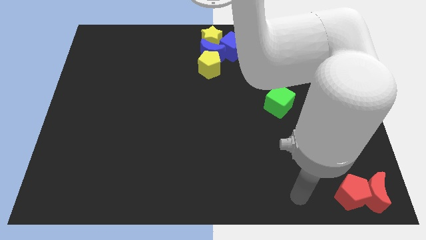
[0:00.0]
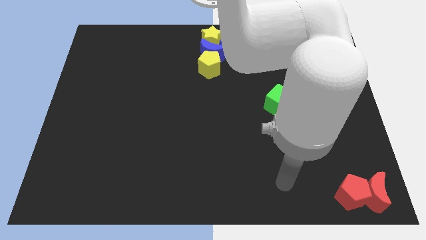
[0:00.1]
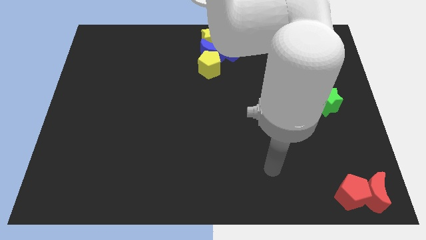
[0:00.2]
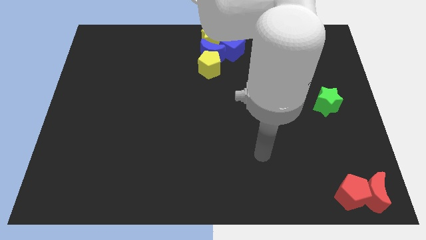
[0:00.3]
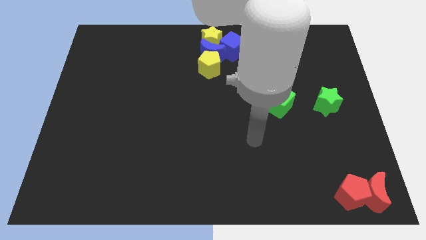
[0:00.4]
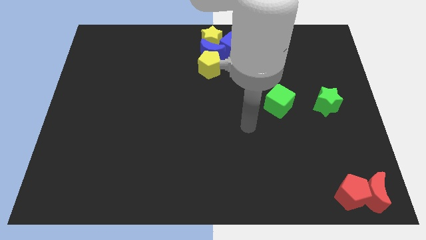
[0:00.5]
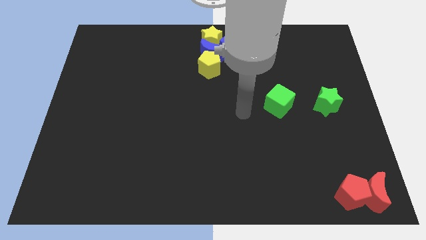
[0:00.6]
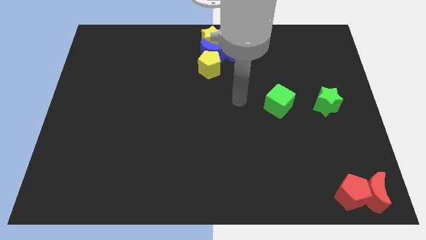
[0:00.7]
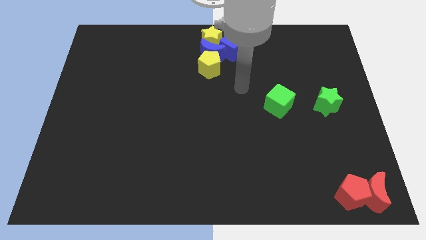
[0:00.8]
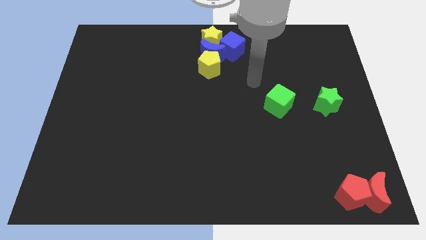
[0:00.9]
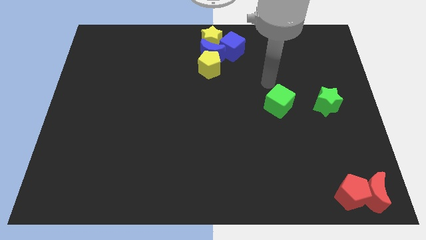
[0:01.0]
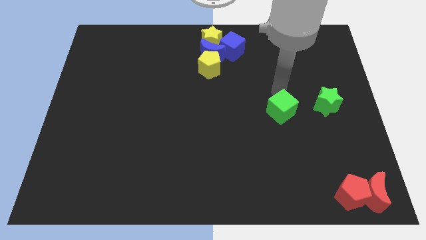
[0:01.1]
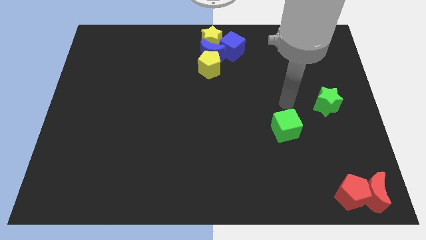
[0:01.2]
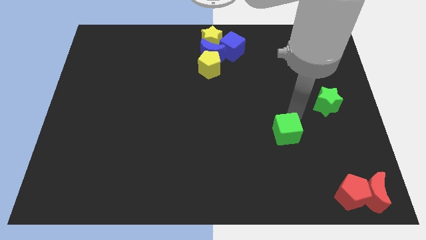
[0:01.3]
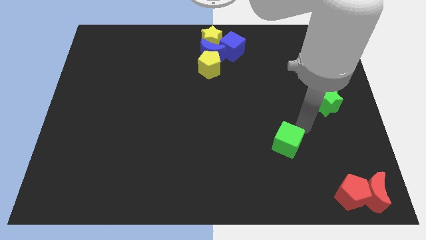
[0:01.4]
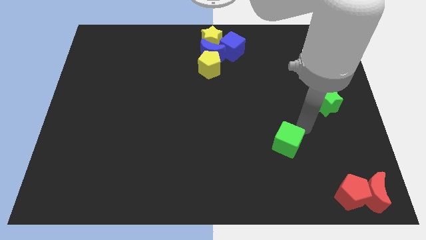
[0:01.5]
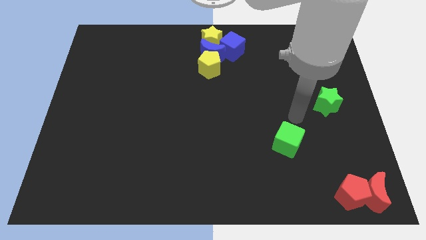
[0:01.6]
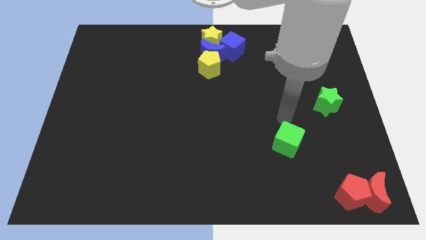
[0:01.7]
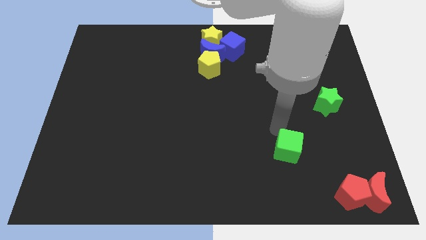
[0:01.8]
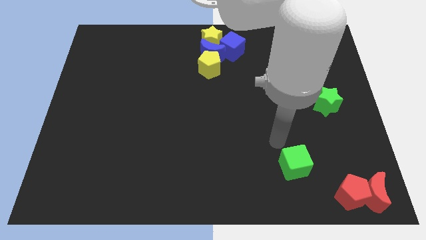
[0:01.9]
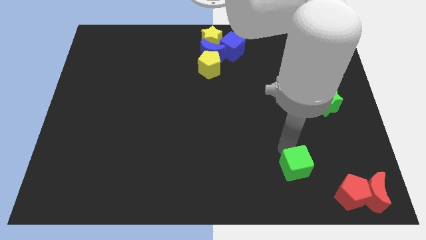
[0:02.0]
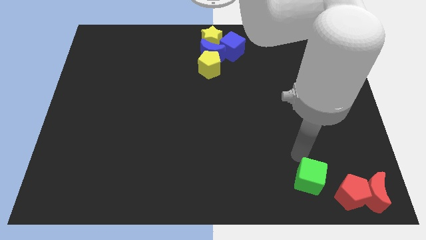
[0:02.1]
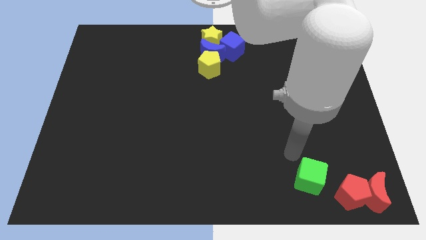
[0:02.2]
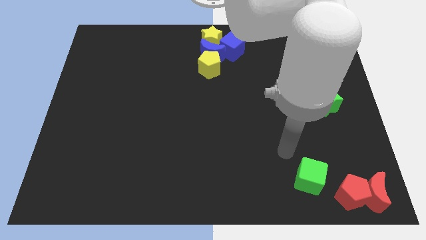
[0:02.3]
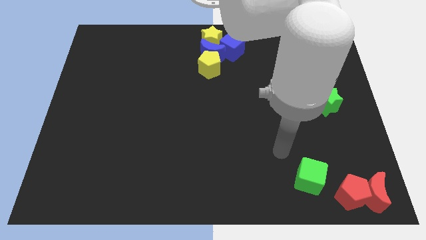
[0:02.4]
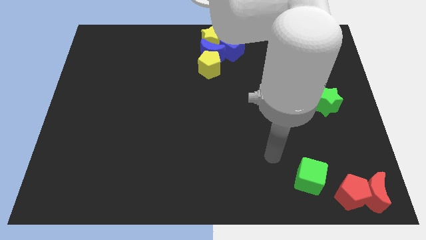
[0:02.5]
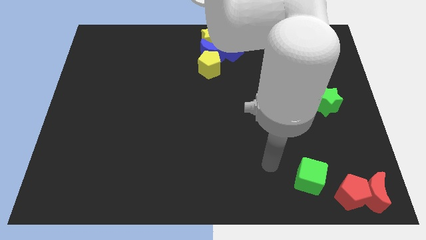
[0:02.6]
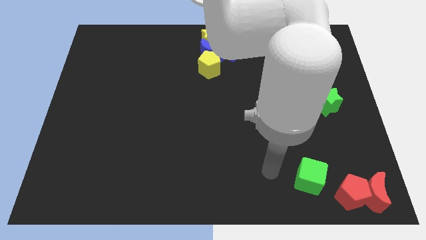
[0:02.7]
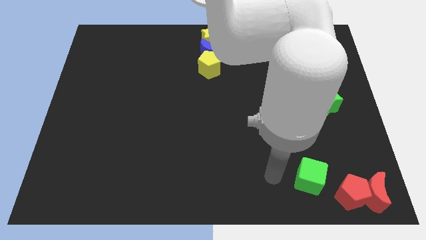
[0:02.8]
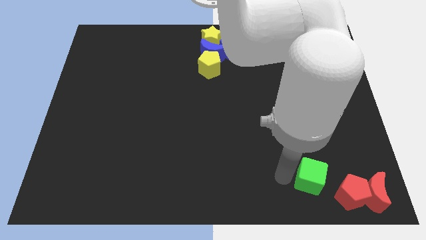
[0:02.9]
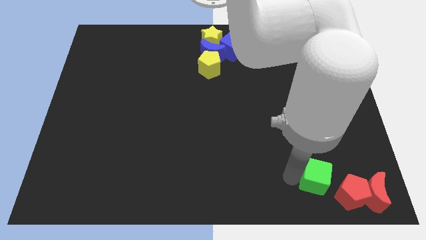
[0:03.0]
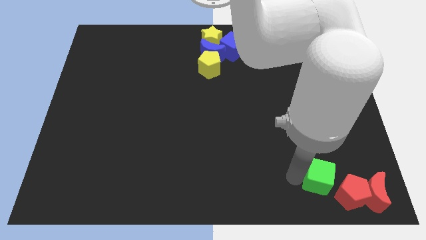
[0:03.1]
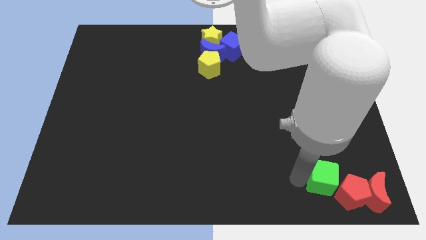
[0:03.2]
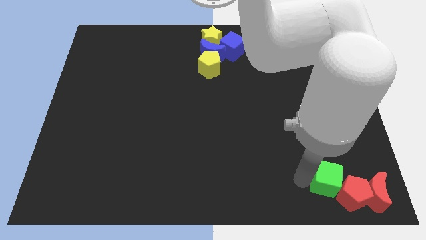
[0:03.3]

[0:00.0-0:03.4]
move the green cube into the left side of the red pentagon

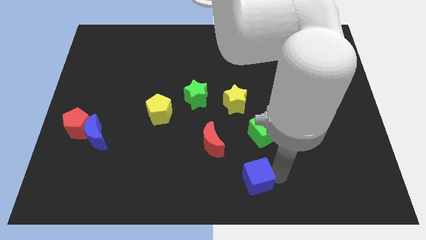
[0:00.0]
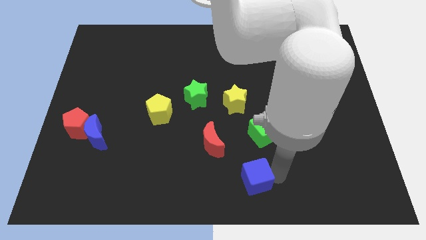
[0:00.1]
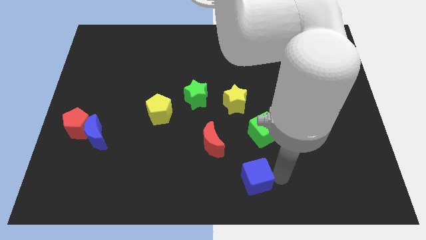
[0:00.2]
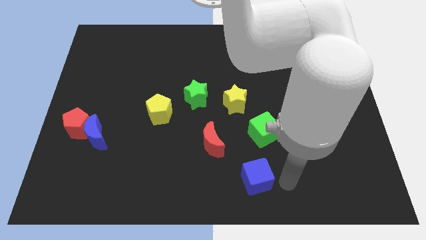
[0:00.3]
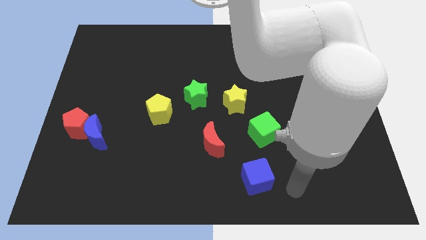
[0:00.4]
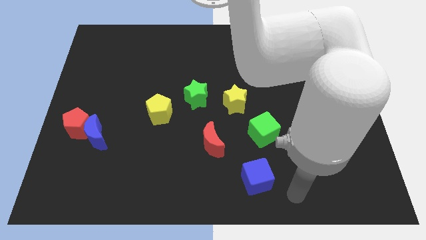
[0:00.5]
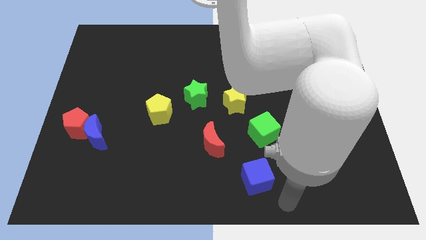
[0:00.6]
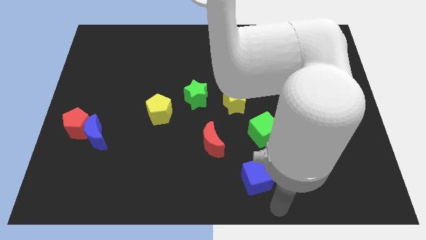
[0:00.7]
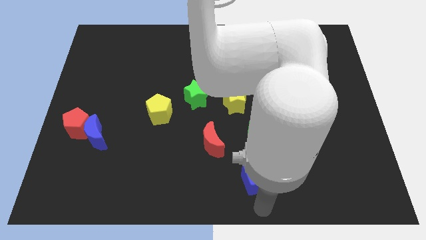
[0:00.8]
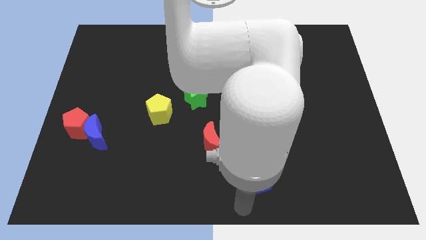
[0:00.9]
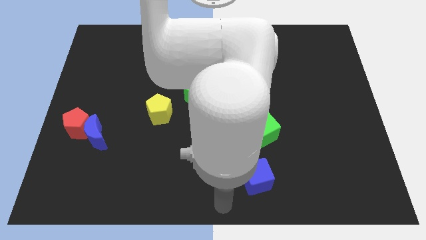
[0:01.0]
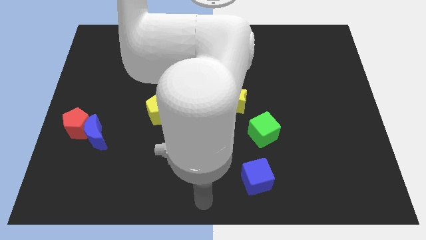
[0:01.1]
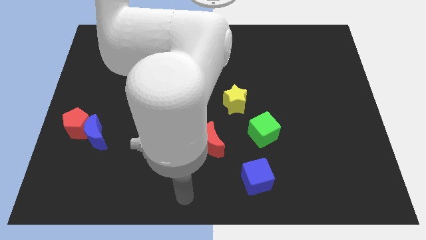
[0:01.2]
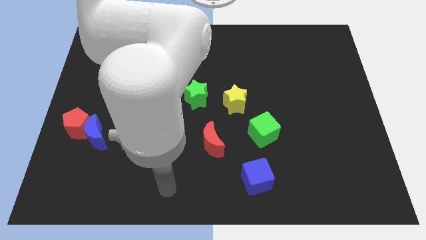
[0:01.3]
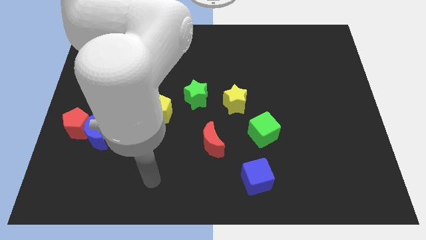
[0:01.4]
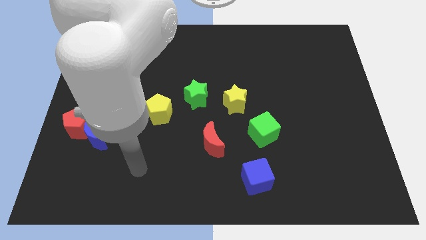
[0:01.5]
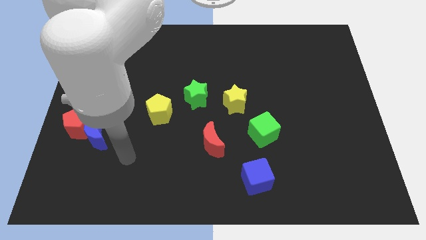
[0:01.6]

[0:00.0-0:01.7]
make a triangle with the help of green cube blue cube and the red crescent

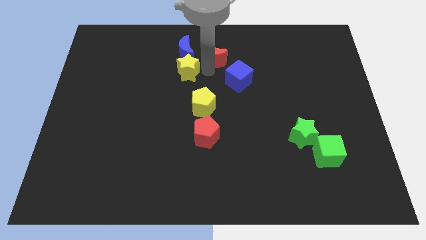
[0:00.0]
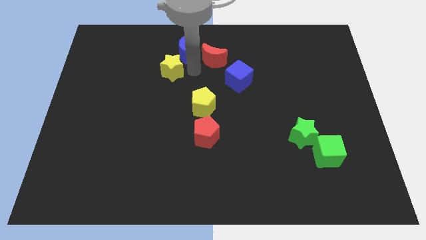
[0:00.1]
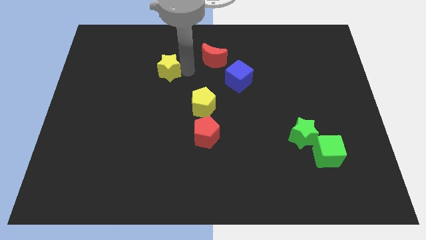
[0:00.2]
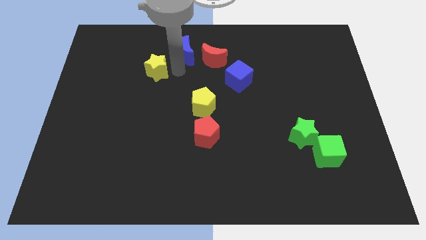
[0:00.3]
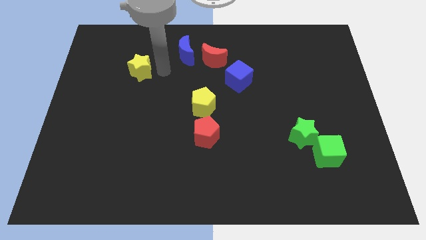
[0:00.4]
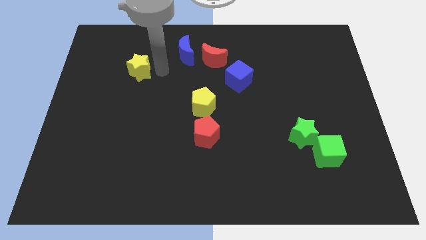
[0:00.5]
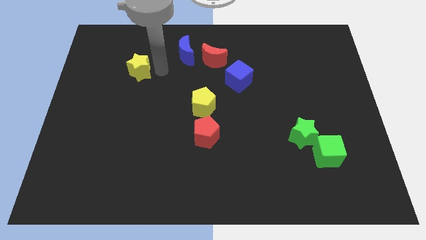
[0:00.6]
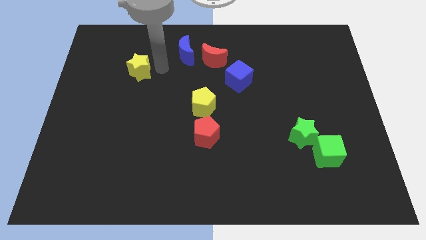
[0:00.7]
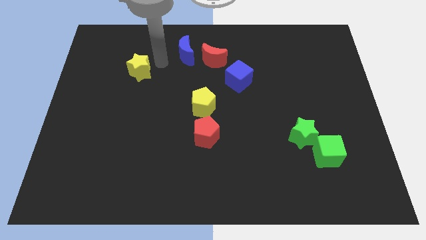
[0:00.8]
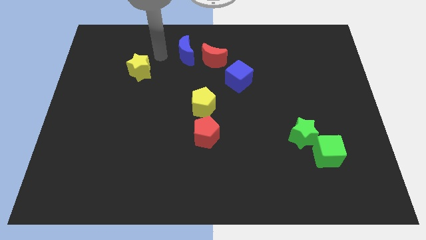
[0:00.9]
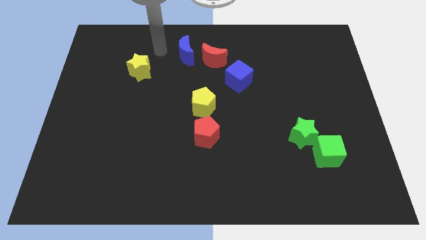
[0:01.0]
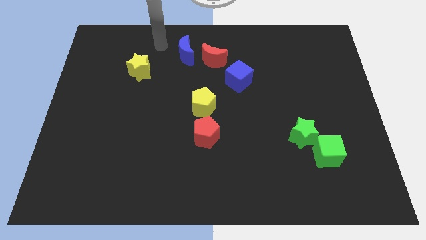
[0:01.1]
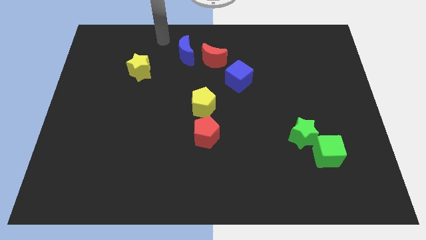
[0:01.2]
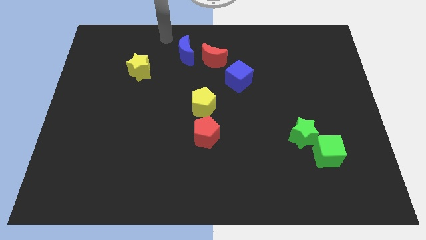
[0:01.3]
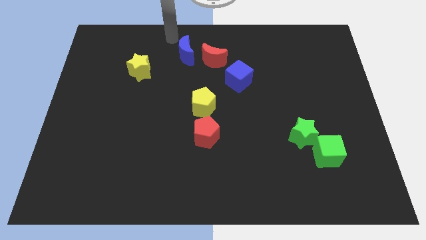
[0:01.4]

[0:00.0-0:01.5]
push the yellow star to the left of the board

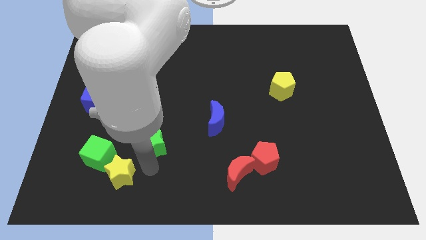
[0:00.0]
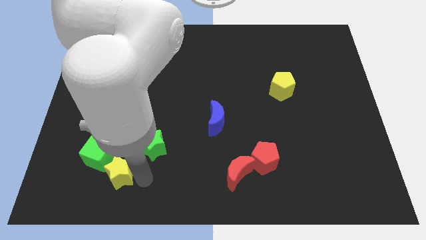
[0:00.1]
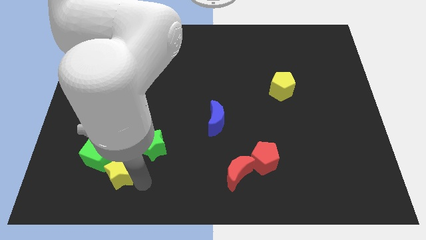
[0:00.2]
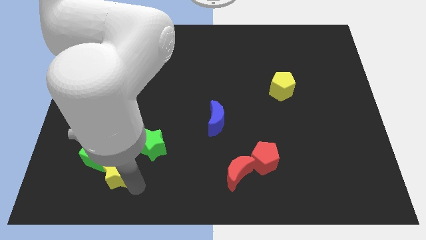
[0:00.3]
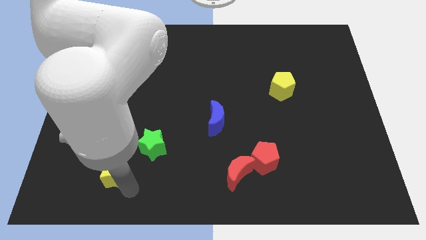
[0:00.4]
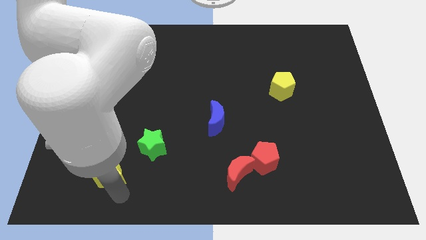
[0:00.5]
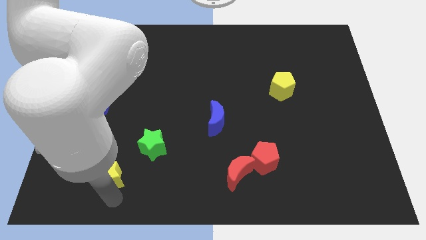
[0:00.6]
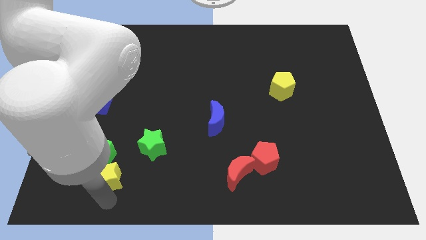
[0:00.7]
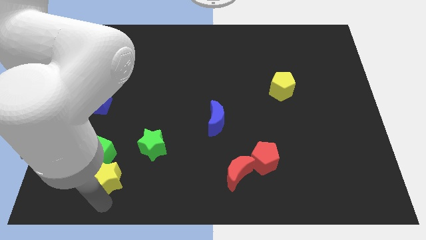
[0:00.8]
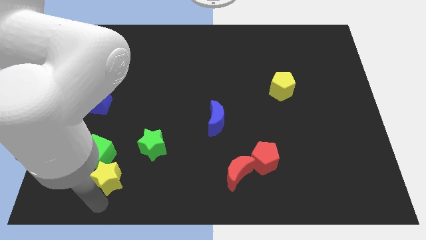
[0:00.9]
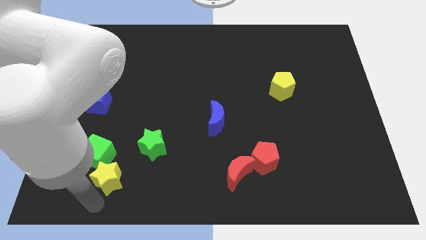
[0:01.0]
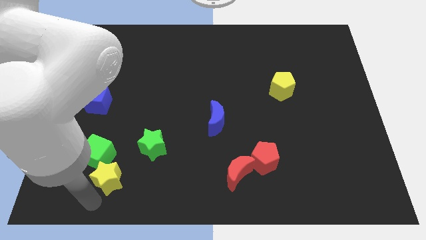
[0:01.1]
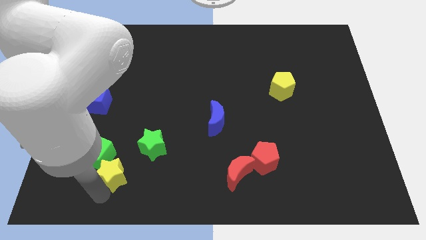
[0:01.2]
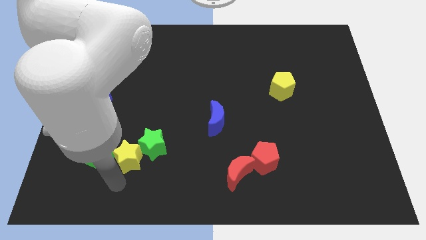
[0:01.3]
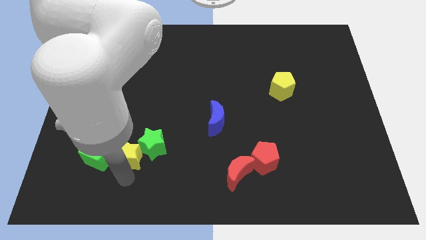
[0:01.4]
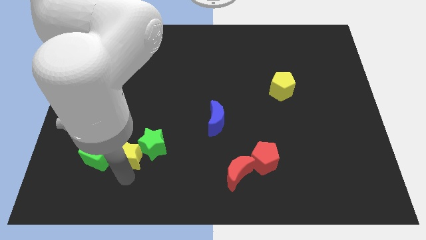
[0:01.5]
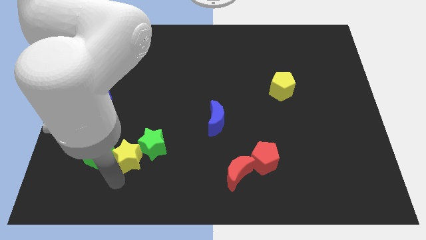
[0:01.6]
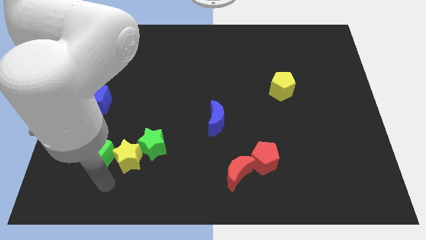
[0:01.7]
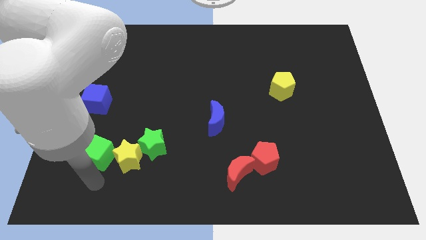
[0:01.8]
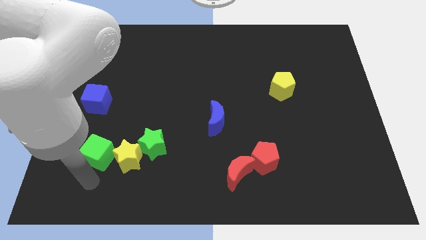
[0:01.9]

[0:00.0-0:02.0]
move yellow star towards the green star

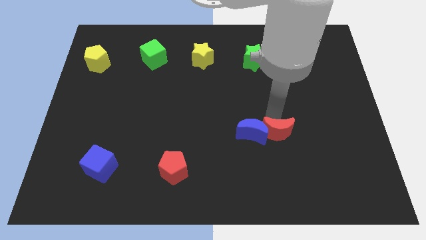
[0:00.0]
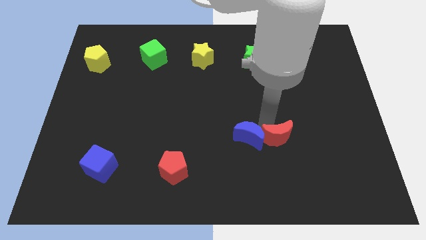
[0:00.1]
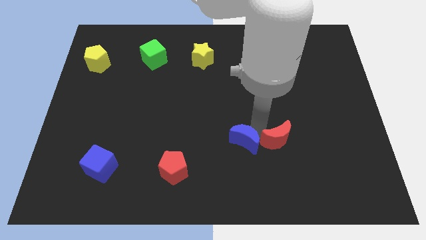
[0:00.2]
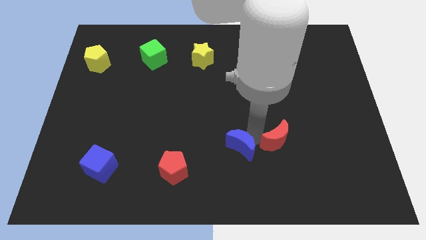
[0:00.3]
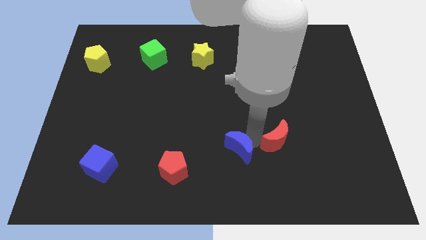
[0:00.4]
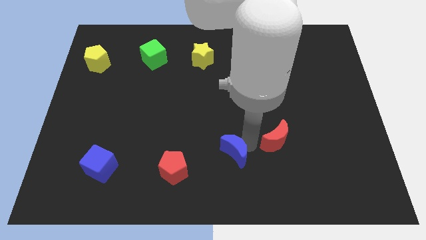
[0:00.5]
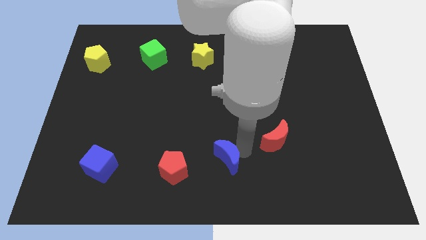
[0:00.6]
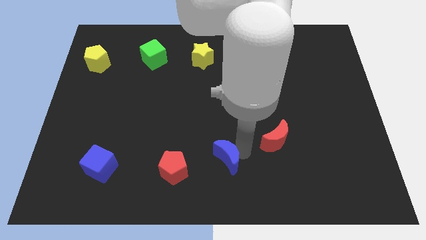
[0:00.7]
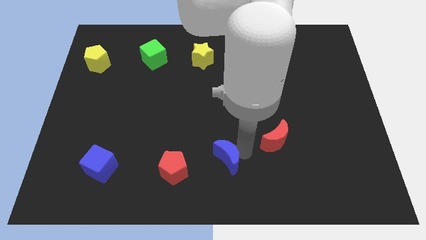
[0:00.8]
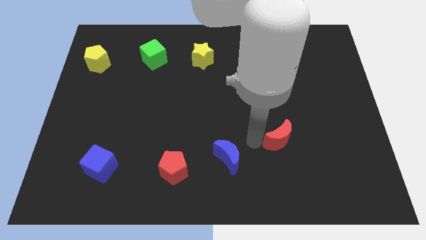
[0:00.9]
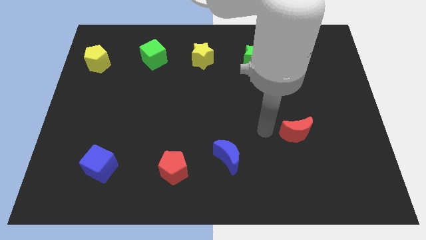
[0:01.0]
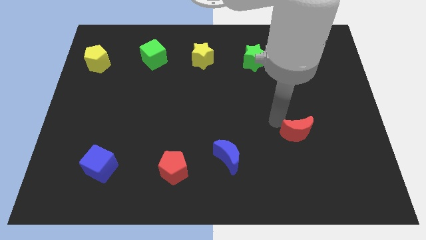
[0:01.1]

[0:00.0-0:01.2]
separate blue moon from the red moon
